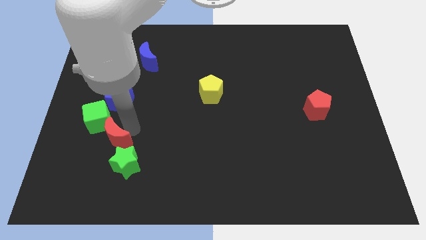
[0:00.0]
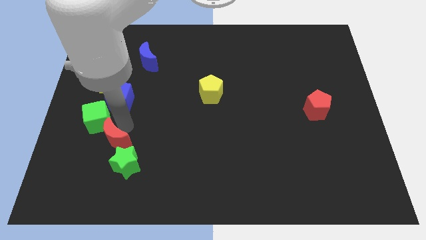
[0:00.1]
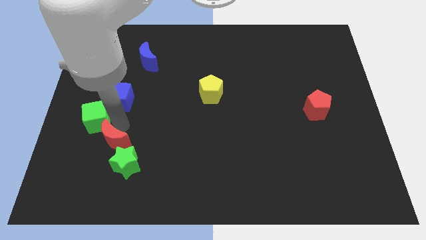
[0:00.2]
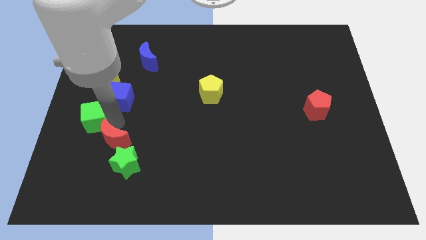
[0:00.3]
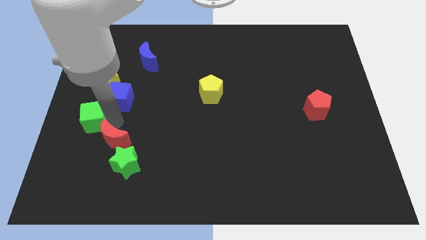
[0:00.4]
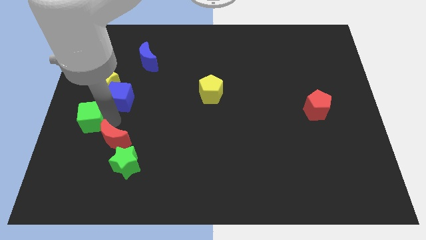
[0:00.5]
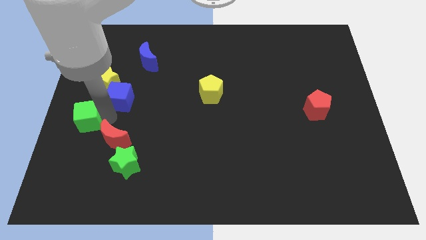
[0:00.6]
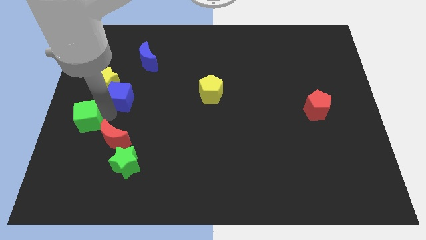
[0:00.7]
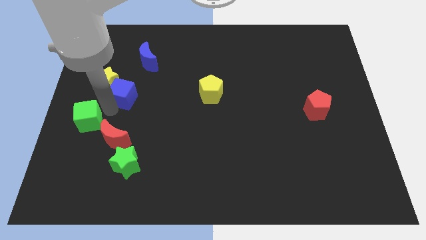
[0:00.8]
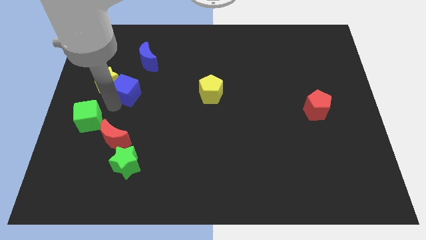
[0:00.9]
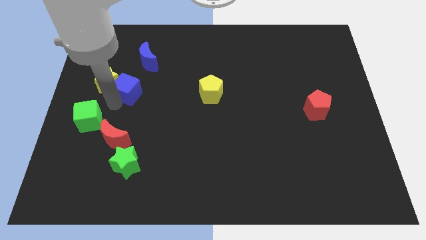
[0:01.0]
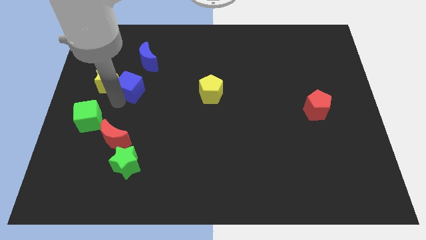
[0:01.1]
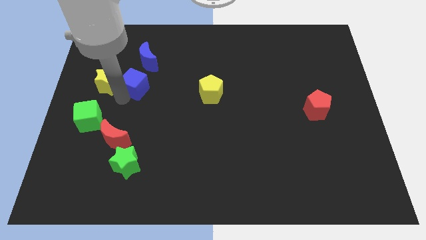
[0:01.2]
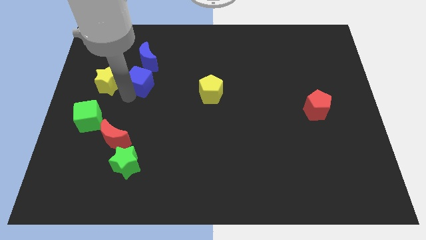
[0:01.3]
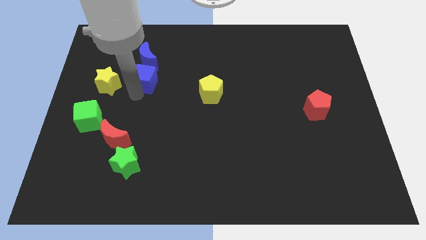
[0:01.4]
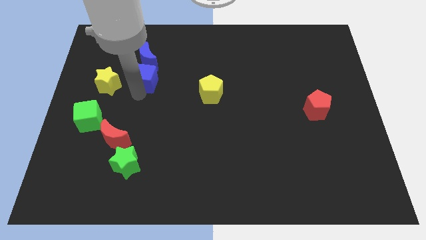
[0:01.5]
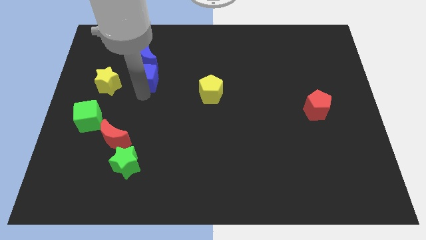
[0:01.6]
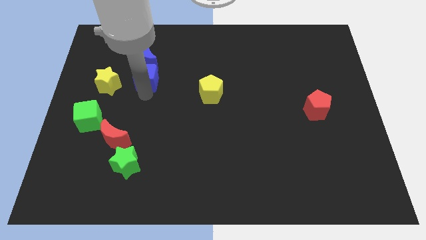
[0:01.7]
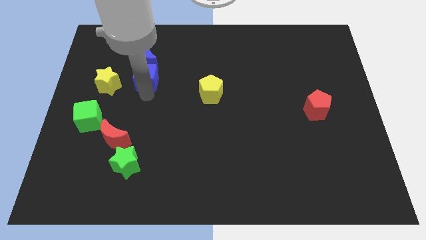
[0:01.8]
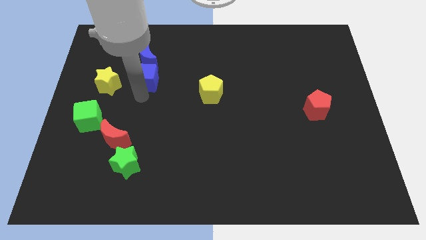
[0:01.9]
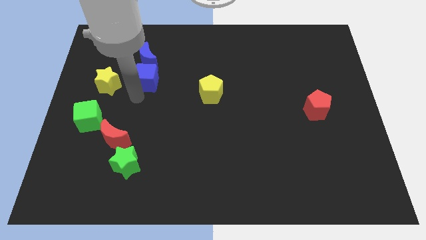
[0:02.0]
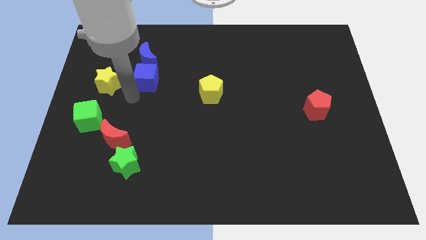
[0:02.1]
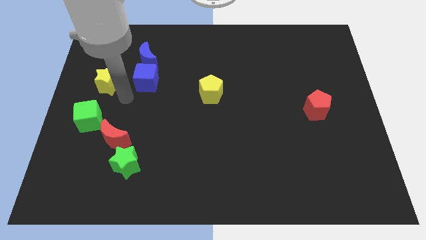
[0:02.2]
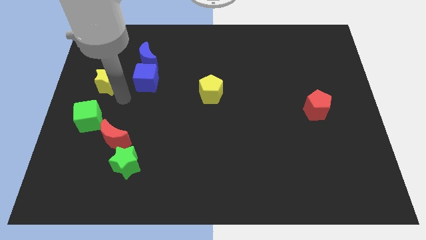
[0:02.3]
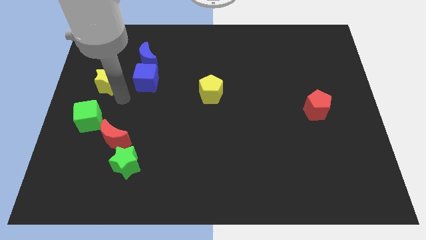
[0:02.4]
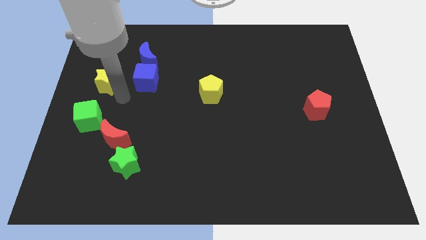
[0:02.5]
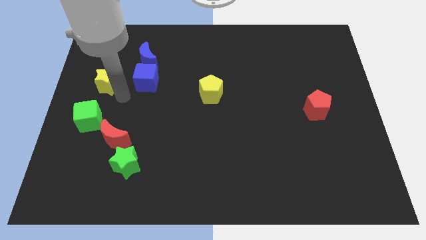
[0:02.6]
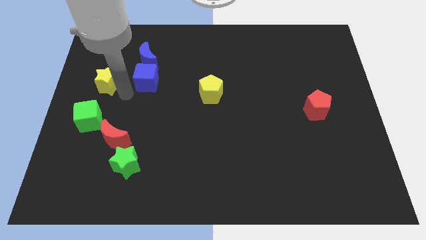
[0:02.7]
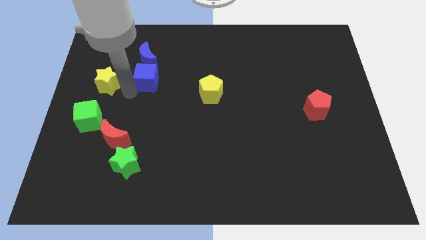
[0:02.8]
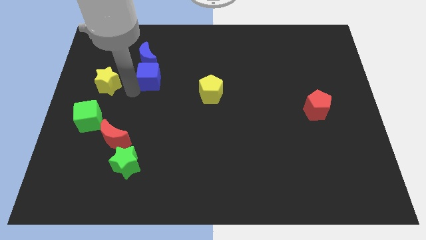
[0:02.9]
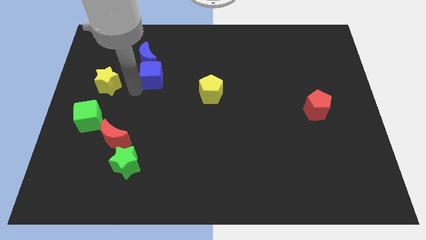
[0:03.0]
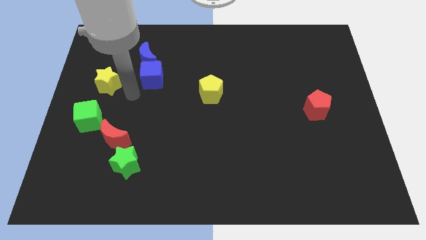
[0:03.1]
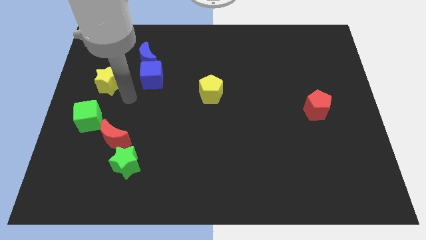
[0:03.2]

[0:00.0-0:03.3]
place the blue cube below the blue moon

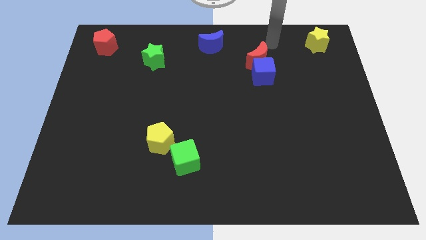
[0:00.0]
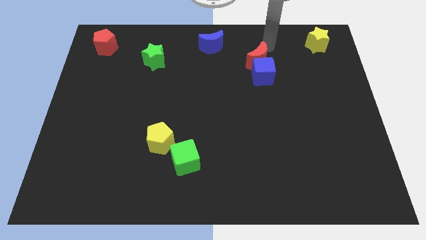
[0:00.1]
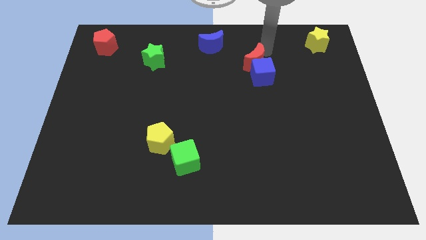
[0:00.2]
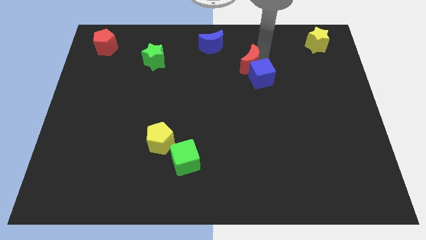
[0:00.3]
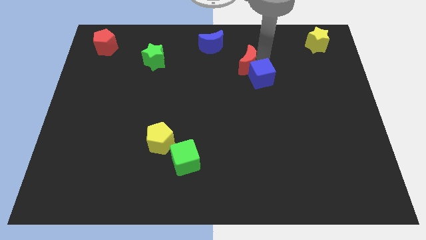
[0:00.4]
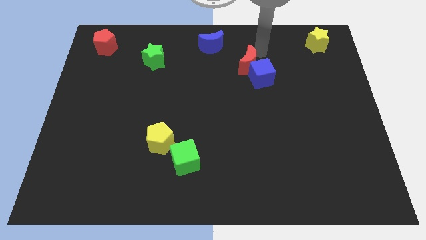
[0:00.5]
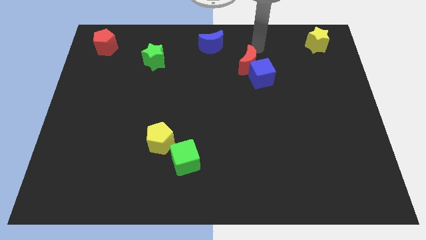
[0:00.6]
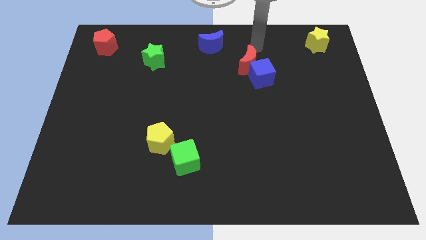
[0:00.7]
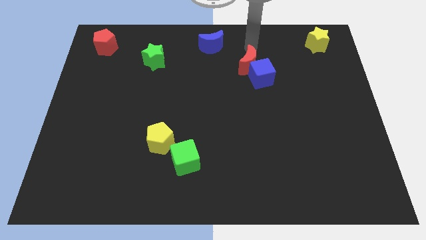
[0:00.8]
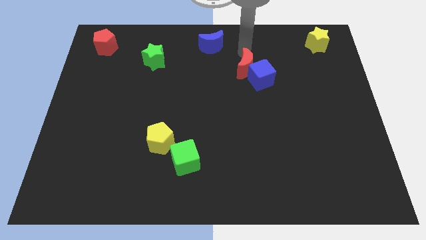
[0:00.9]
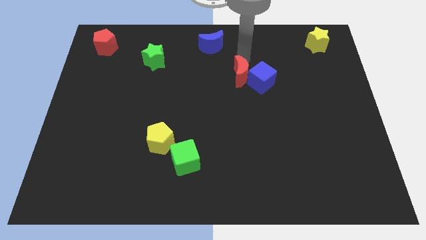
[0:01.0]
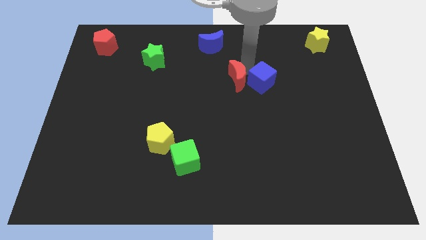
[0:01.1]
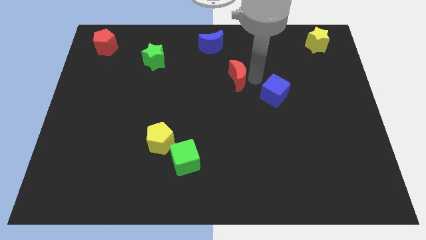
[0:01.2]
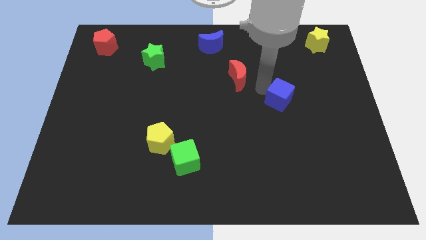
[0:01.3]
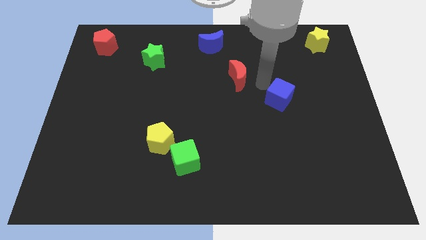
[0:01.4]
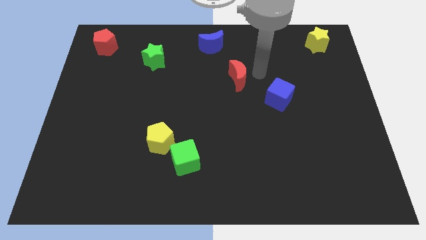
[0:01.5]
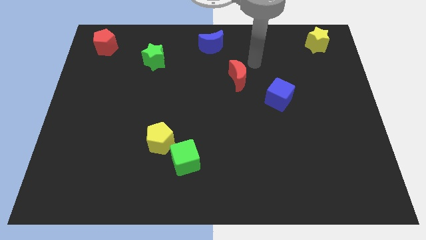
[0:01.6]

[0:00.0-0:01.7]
separate the red crescent and blue cube from each other

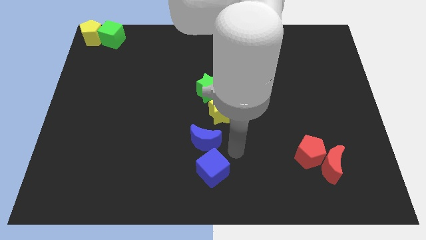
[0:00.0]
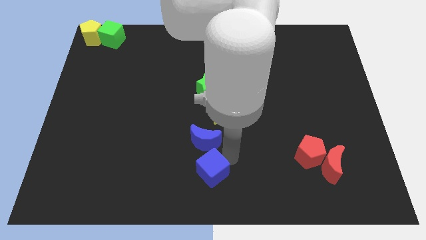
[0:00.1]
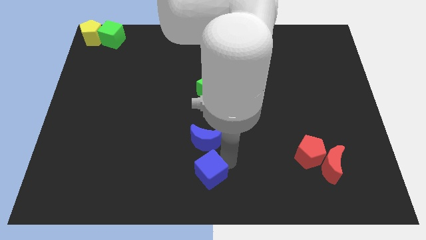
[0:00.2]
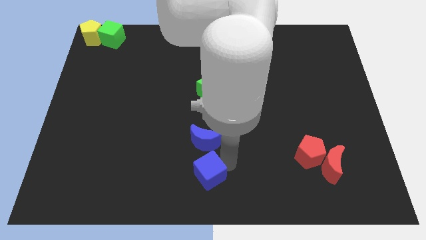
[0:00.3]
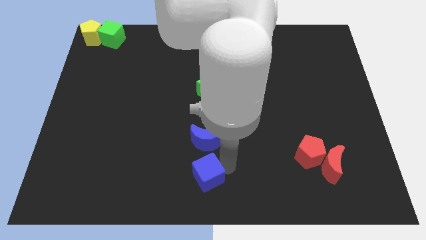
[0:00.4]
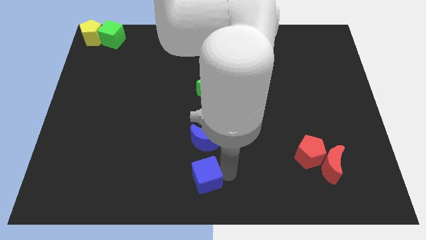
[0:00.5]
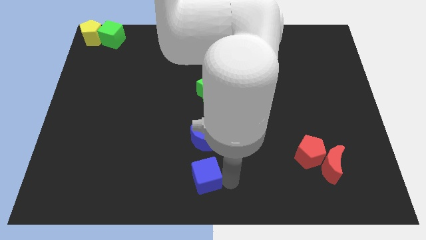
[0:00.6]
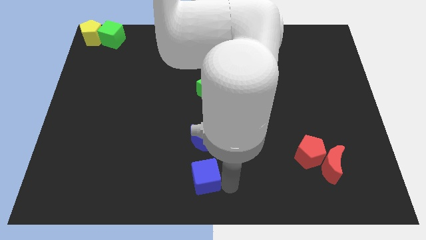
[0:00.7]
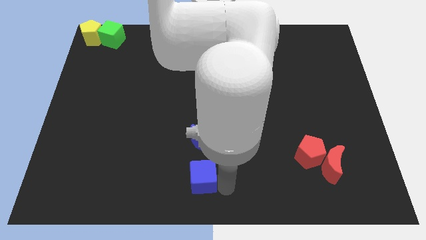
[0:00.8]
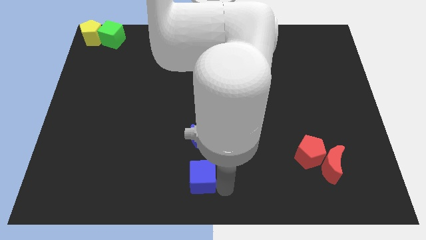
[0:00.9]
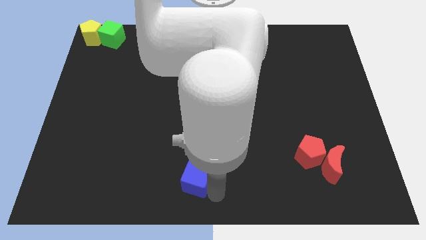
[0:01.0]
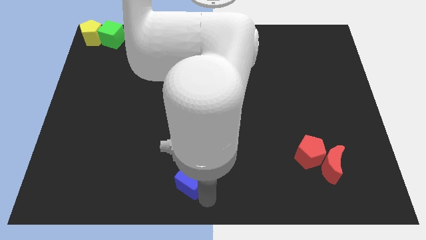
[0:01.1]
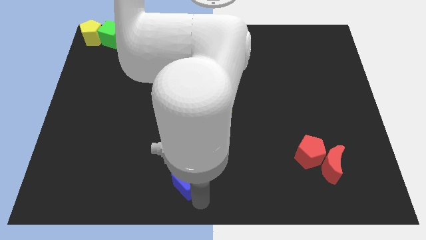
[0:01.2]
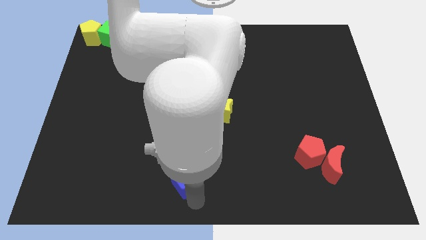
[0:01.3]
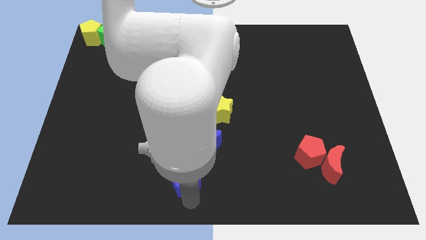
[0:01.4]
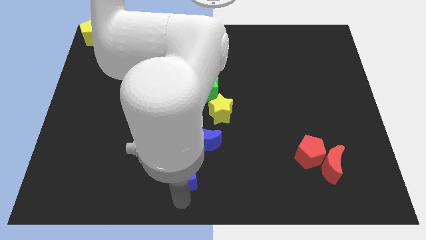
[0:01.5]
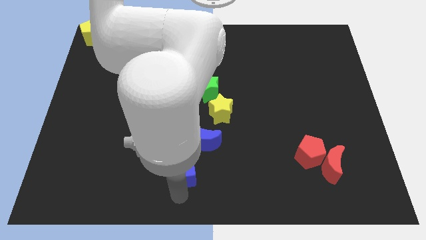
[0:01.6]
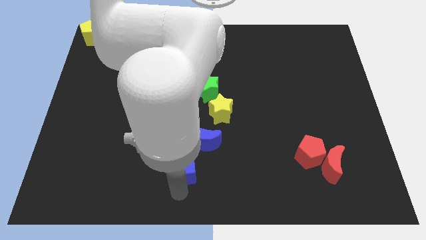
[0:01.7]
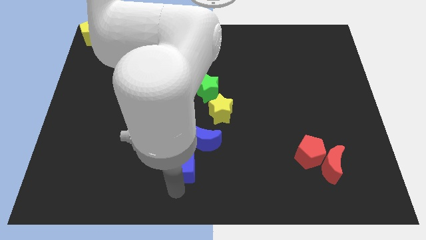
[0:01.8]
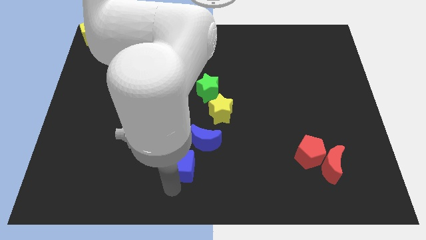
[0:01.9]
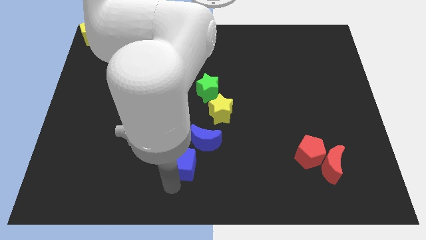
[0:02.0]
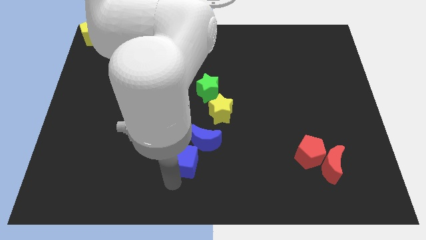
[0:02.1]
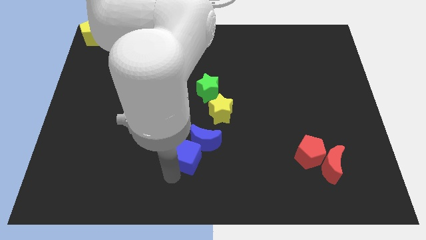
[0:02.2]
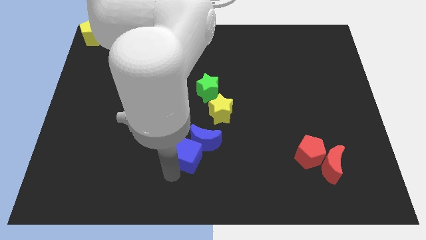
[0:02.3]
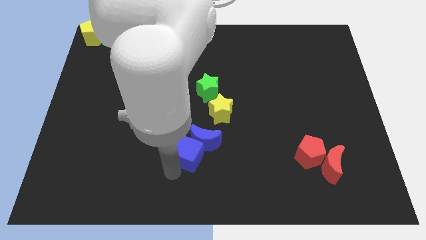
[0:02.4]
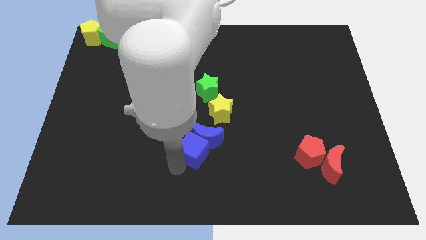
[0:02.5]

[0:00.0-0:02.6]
move the blue cube below the blue moon diagonally

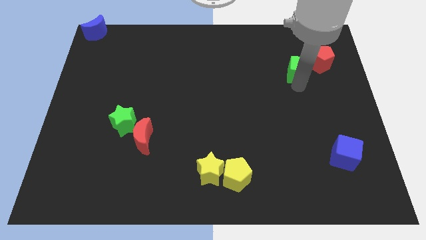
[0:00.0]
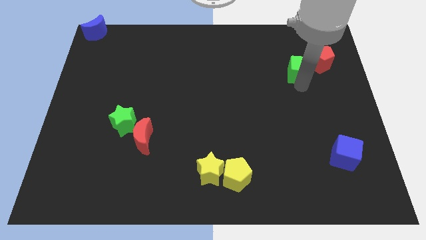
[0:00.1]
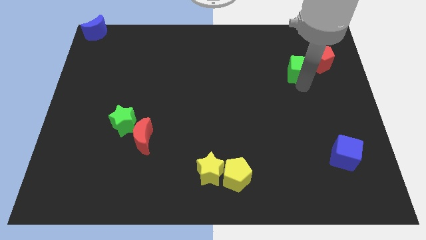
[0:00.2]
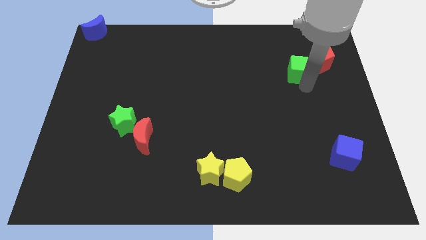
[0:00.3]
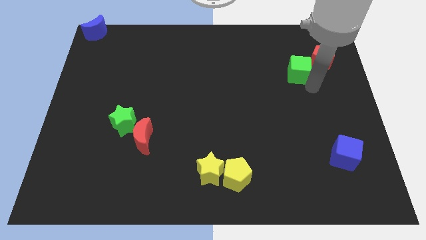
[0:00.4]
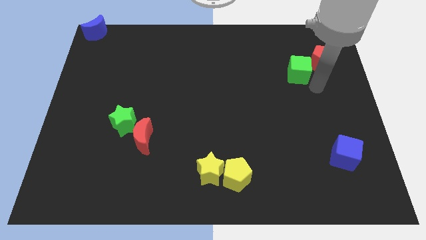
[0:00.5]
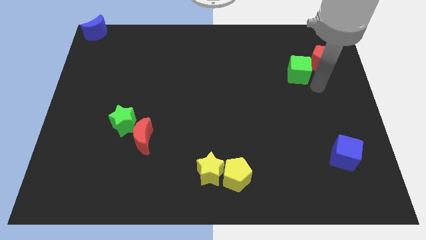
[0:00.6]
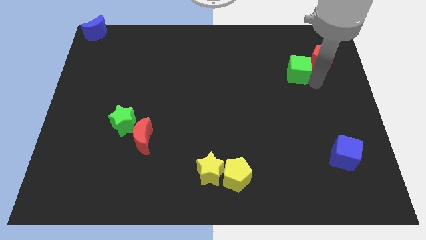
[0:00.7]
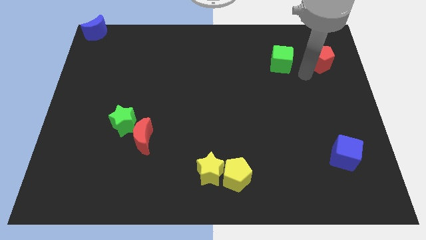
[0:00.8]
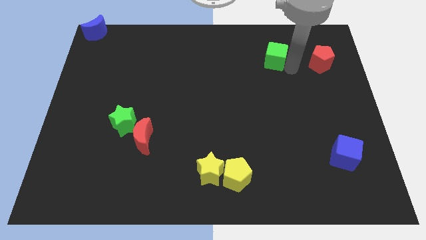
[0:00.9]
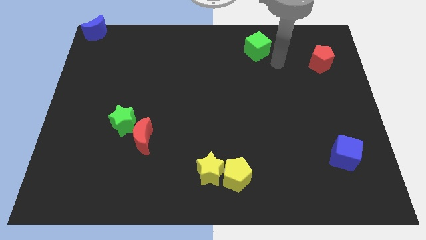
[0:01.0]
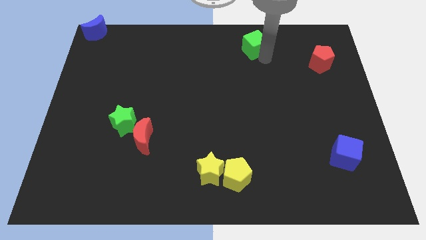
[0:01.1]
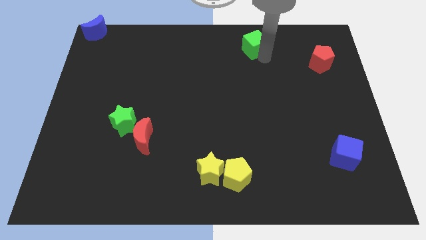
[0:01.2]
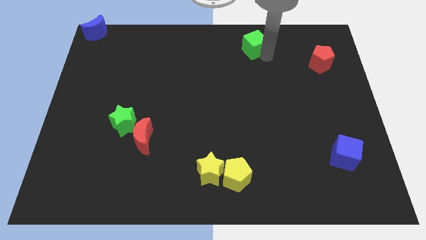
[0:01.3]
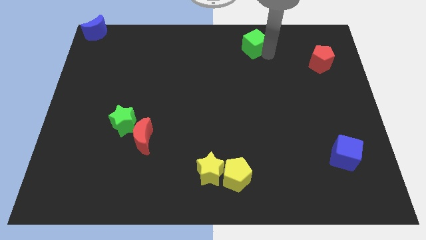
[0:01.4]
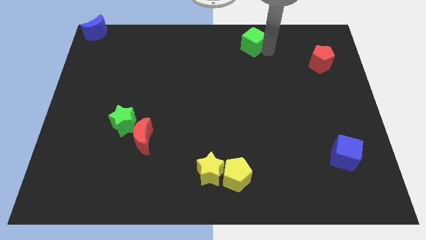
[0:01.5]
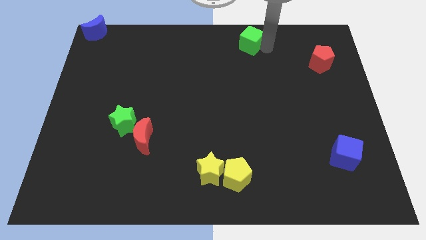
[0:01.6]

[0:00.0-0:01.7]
move the green cube to the top side of the board
